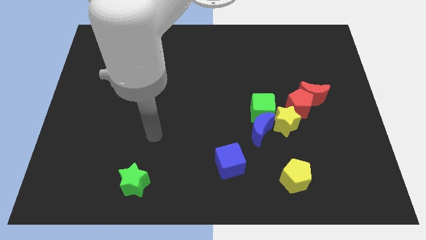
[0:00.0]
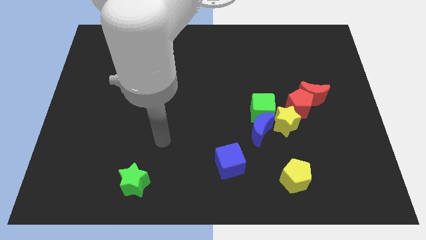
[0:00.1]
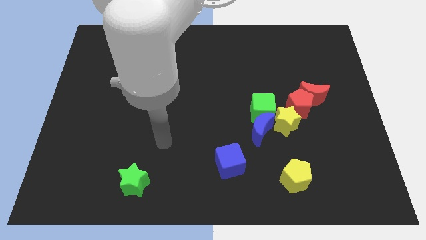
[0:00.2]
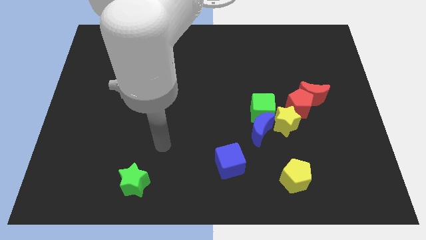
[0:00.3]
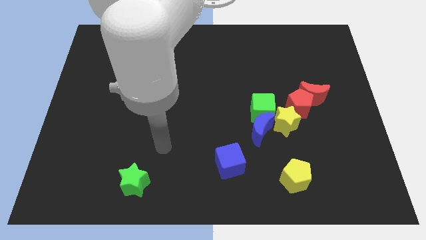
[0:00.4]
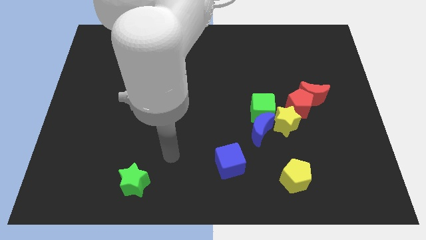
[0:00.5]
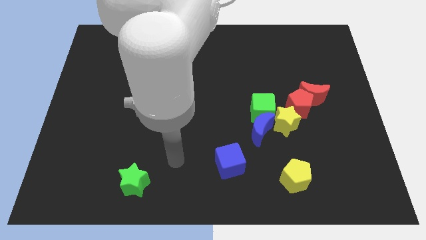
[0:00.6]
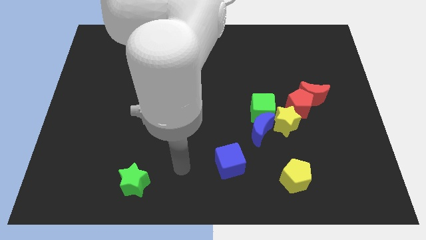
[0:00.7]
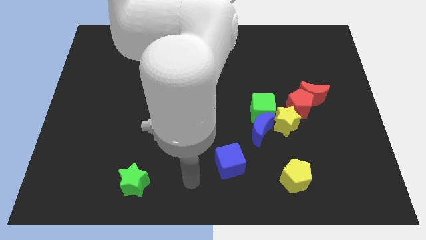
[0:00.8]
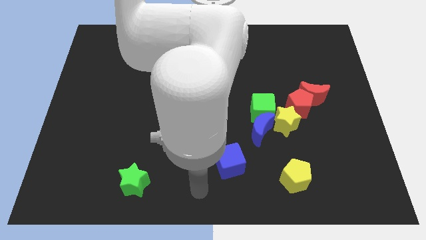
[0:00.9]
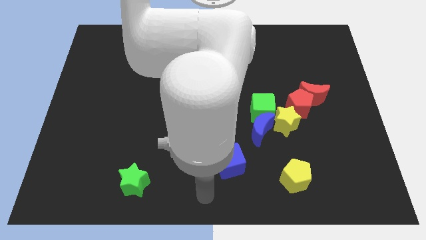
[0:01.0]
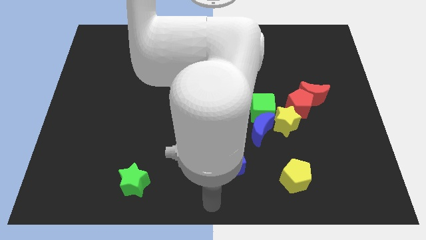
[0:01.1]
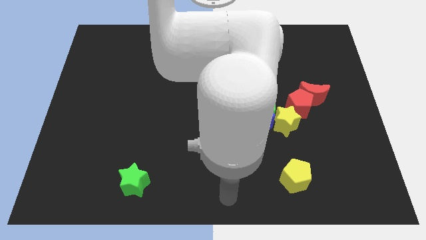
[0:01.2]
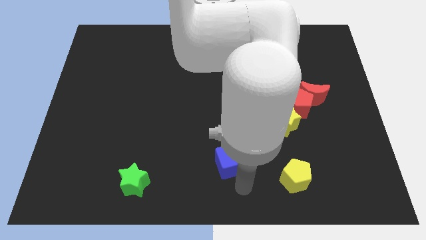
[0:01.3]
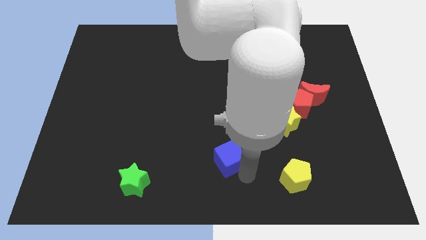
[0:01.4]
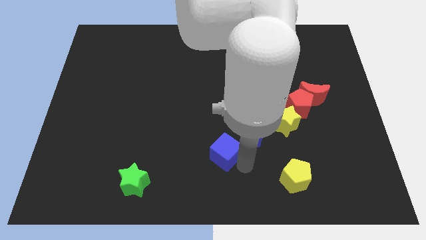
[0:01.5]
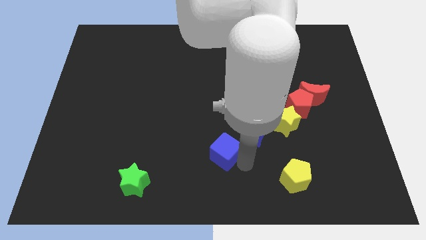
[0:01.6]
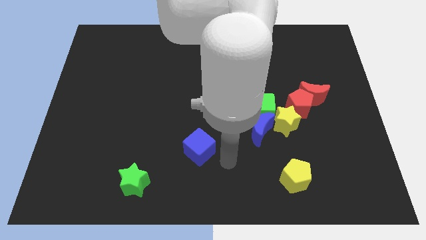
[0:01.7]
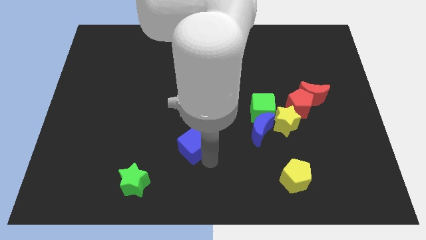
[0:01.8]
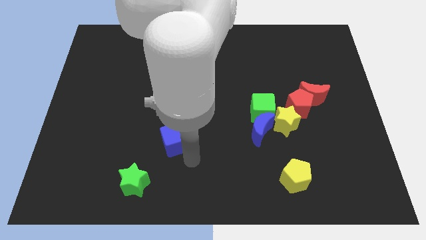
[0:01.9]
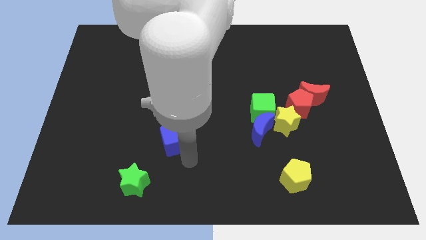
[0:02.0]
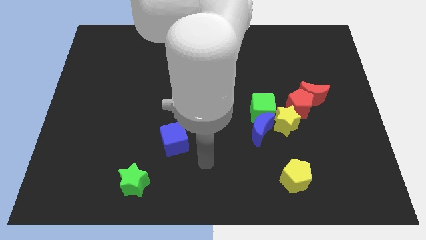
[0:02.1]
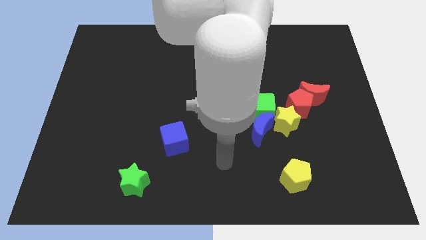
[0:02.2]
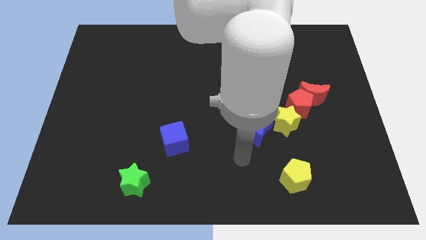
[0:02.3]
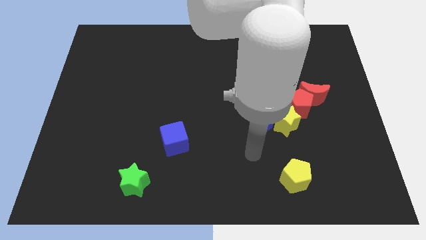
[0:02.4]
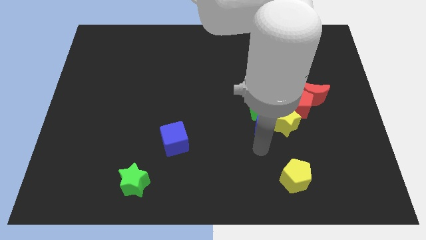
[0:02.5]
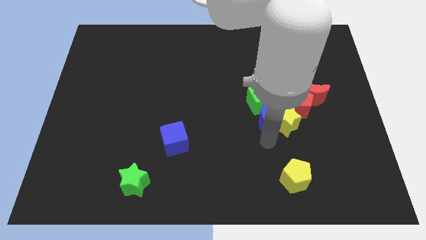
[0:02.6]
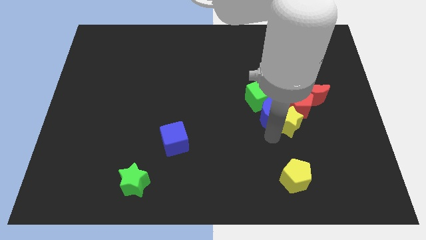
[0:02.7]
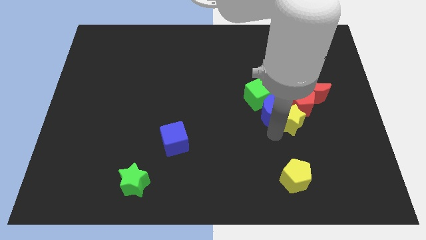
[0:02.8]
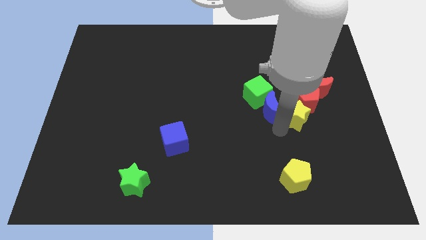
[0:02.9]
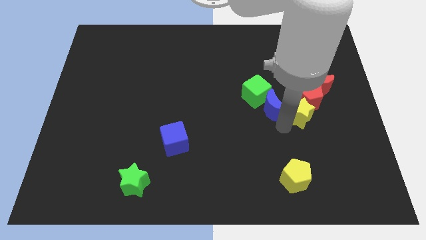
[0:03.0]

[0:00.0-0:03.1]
move blue cube slightly left

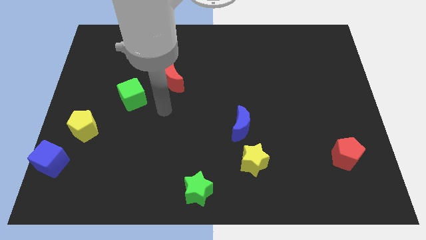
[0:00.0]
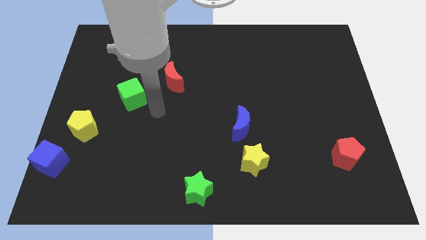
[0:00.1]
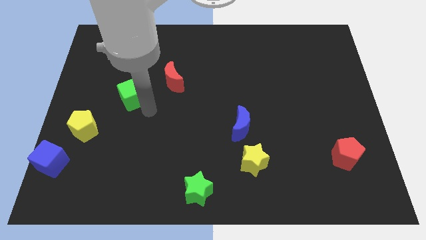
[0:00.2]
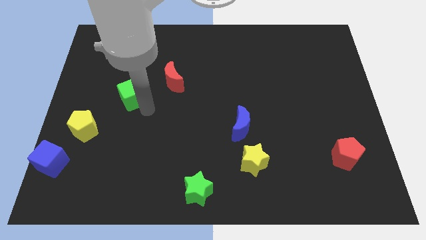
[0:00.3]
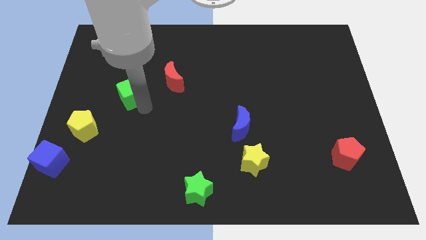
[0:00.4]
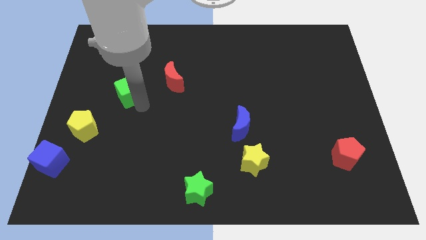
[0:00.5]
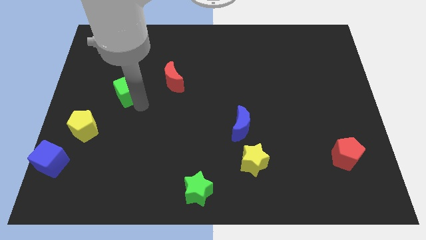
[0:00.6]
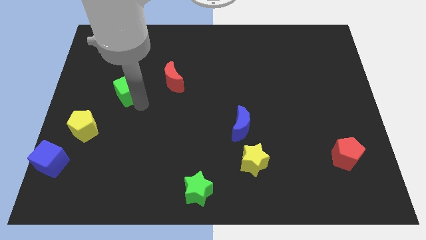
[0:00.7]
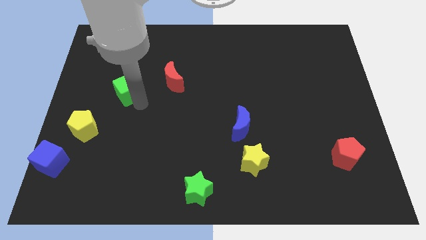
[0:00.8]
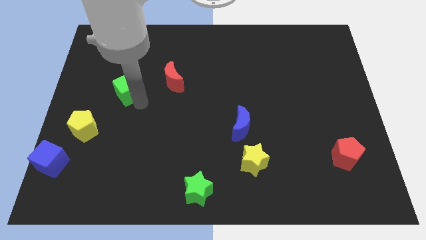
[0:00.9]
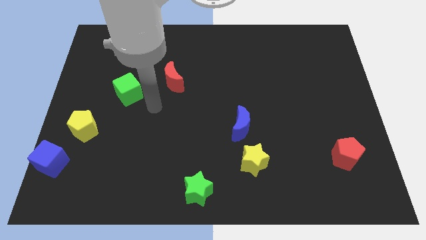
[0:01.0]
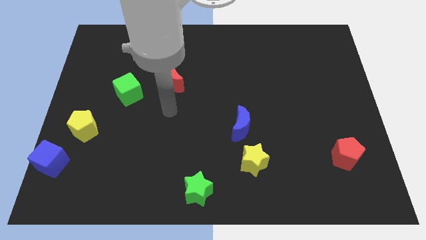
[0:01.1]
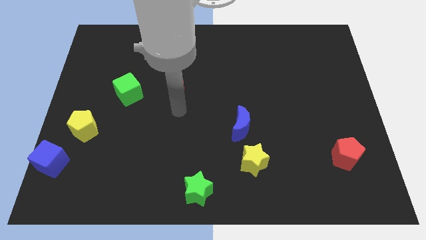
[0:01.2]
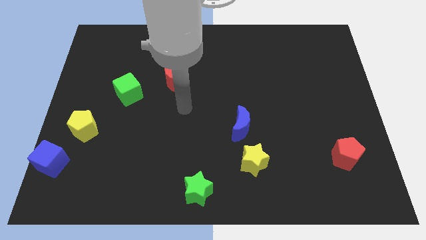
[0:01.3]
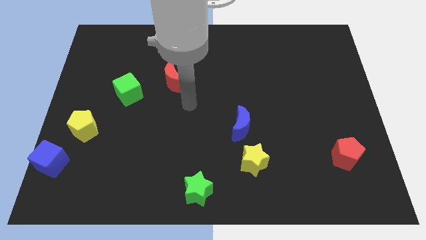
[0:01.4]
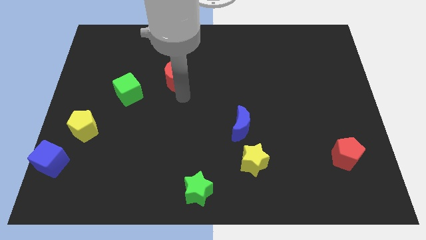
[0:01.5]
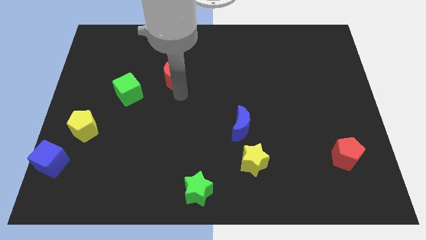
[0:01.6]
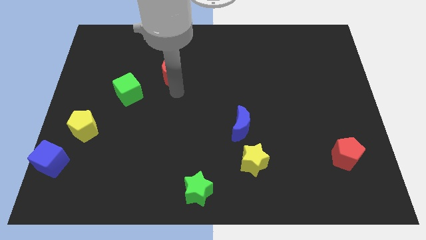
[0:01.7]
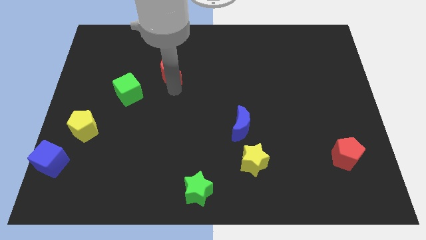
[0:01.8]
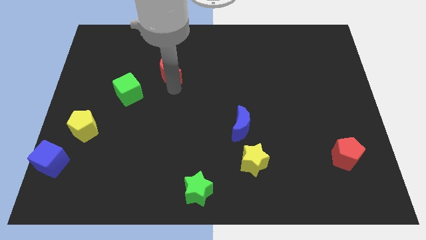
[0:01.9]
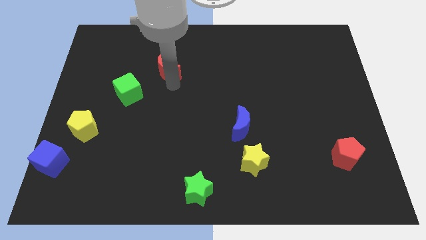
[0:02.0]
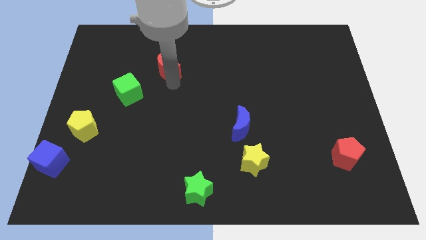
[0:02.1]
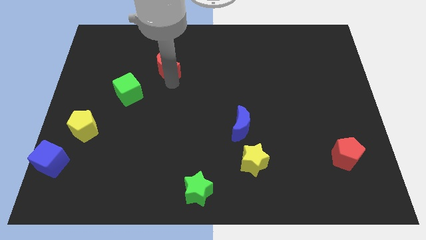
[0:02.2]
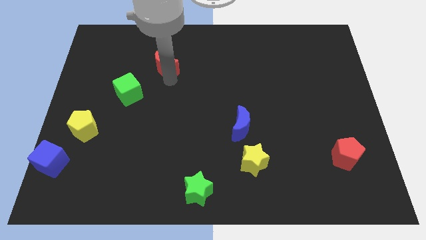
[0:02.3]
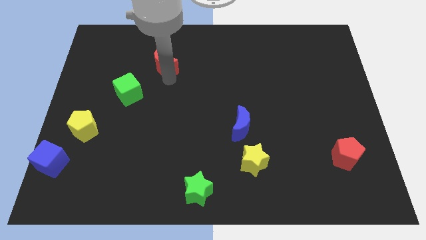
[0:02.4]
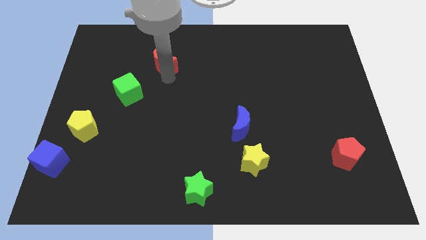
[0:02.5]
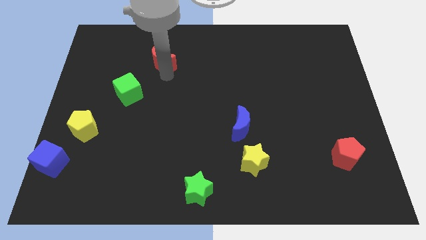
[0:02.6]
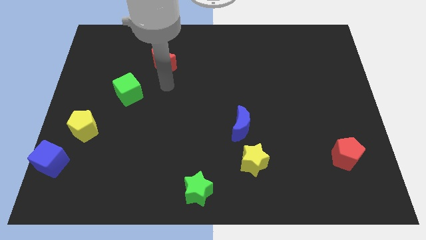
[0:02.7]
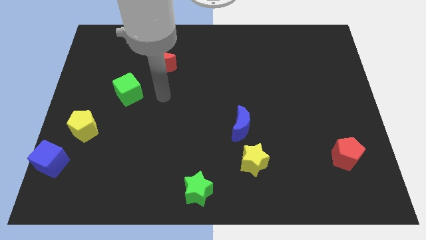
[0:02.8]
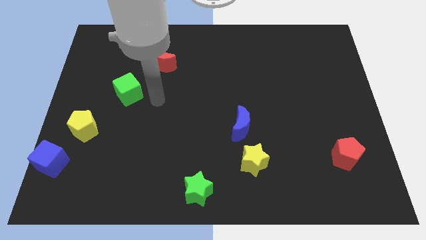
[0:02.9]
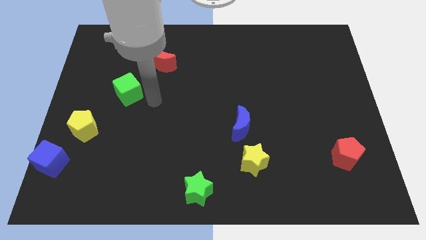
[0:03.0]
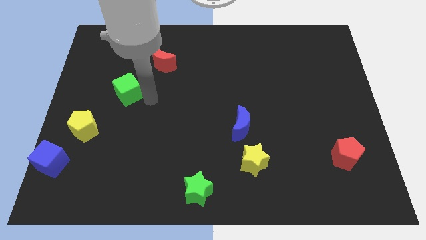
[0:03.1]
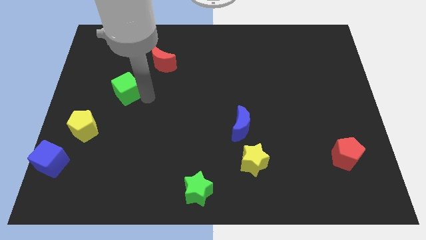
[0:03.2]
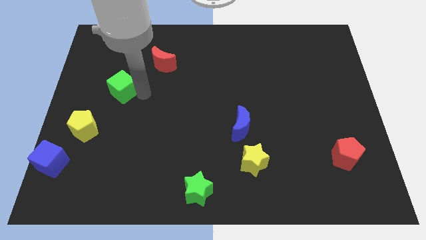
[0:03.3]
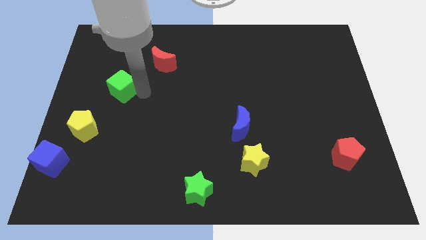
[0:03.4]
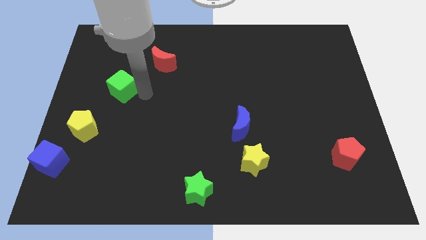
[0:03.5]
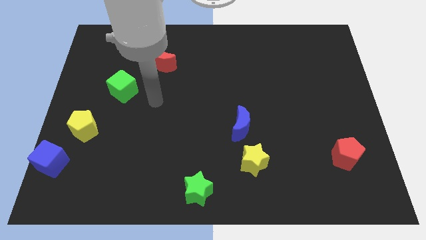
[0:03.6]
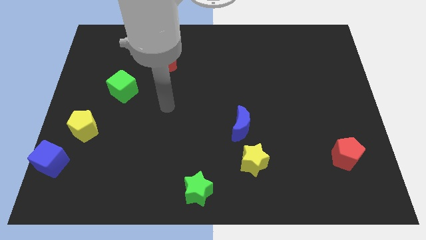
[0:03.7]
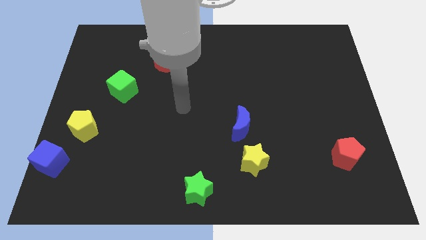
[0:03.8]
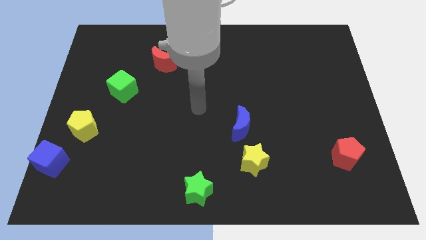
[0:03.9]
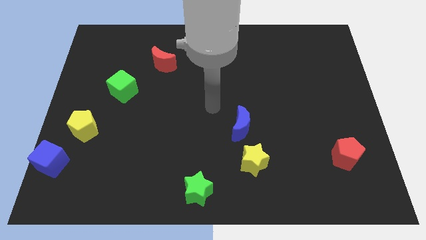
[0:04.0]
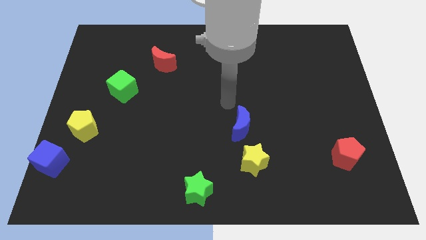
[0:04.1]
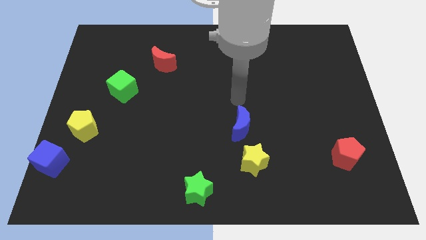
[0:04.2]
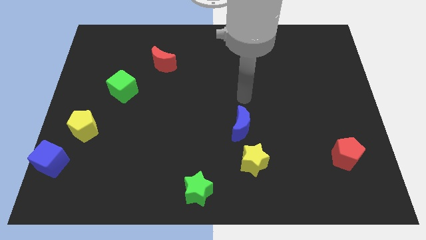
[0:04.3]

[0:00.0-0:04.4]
place the red crescent and the green cube in a diagonal line

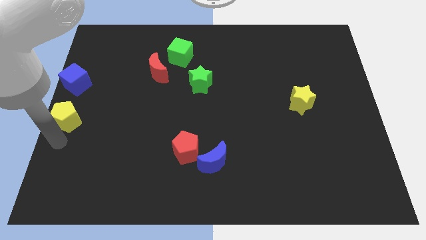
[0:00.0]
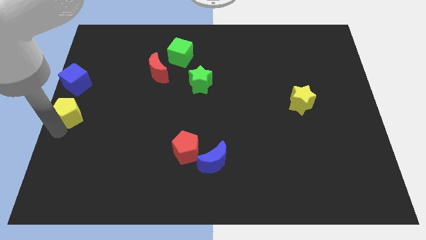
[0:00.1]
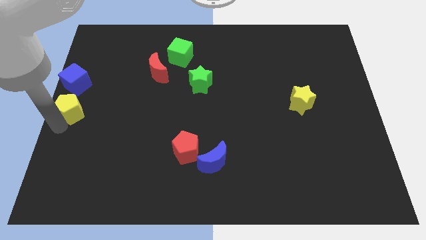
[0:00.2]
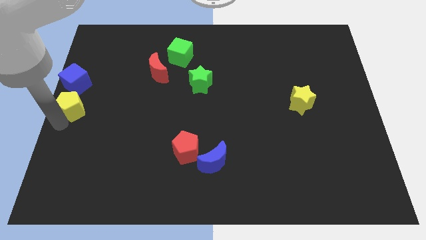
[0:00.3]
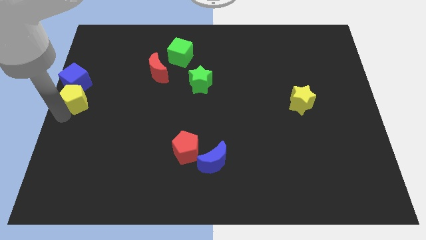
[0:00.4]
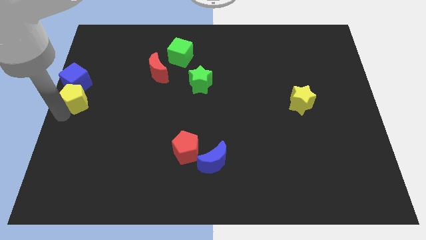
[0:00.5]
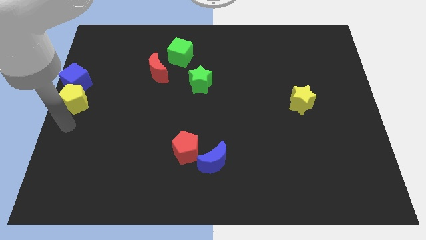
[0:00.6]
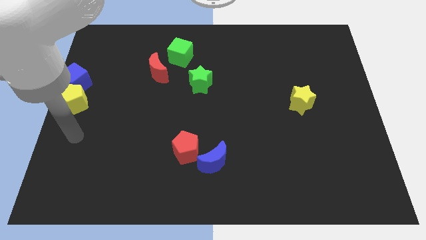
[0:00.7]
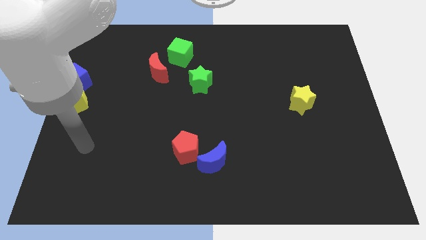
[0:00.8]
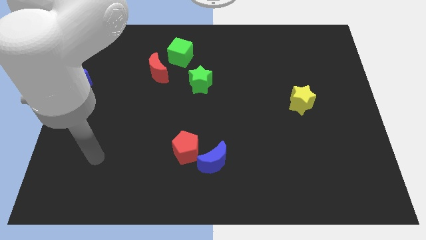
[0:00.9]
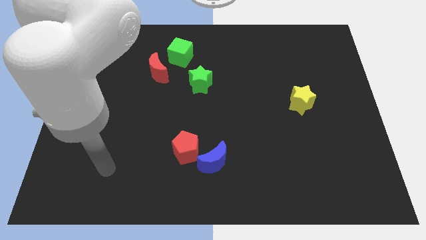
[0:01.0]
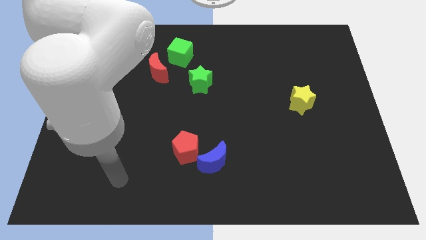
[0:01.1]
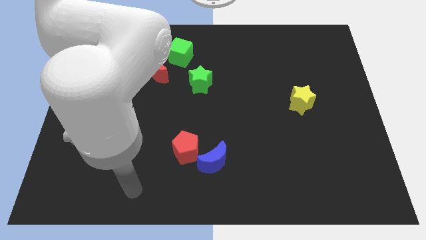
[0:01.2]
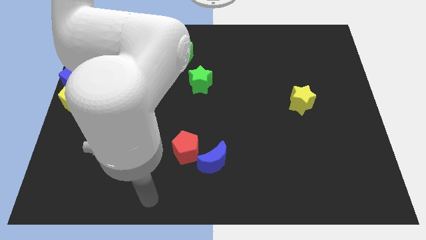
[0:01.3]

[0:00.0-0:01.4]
move the yellow pentagon to the bottom of the blue cube
